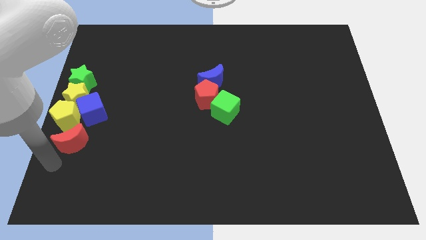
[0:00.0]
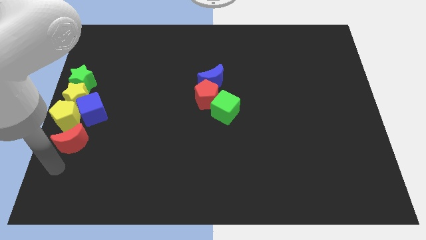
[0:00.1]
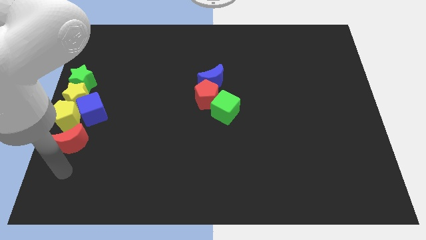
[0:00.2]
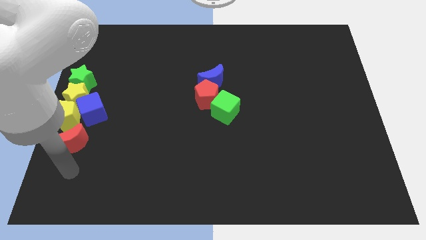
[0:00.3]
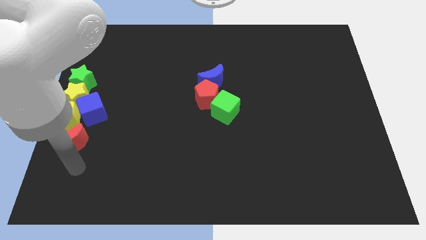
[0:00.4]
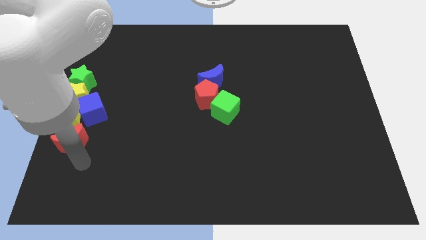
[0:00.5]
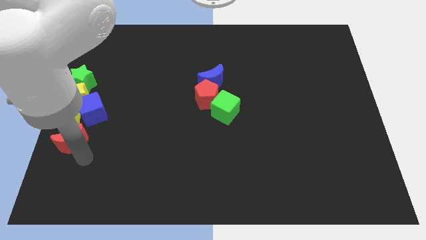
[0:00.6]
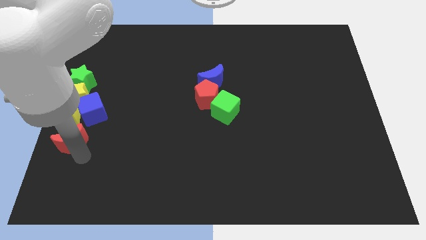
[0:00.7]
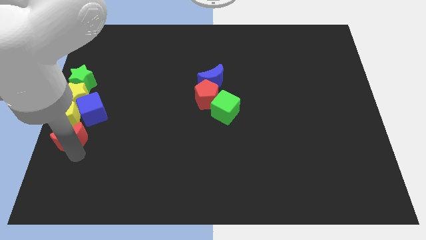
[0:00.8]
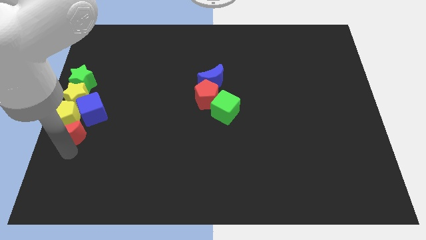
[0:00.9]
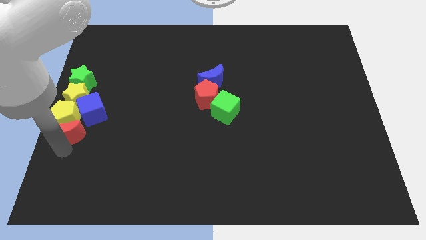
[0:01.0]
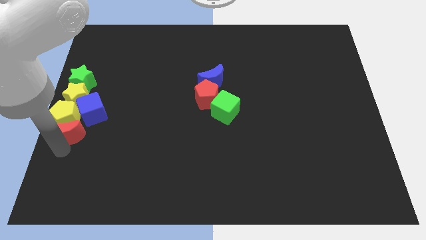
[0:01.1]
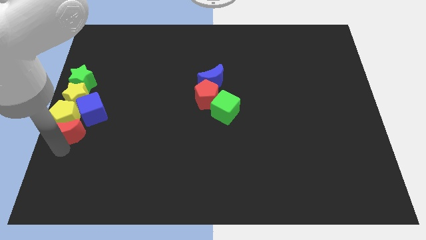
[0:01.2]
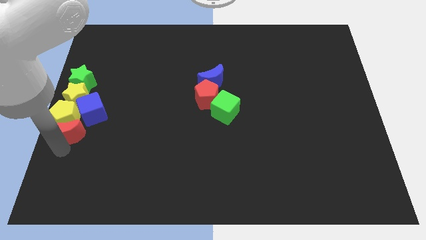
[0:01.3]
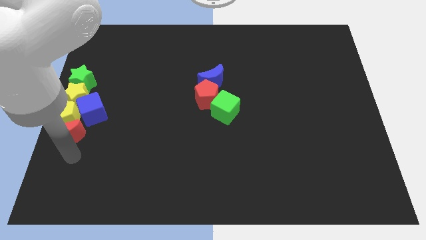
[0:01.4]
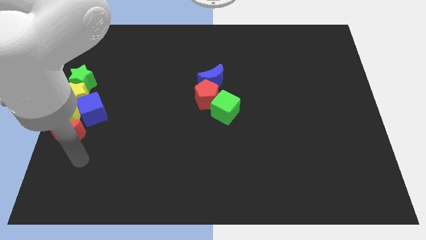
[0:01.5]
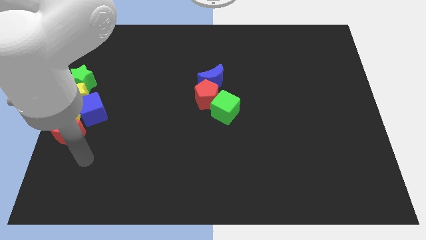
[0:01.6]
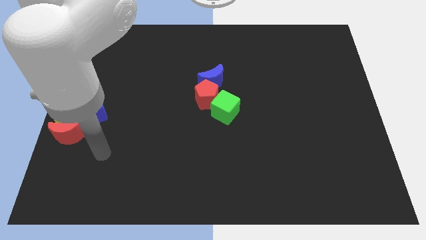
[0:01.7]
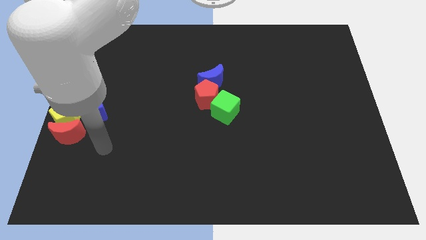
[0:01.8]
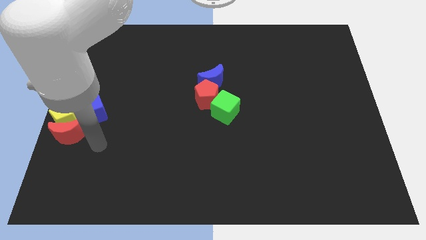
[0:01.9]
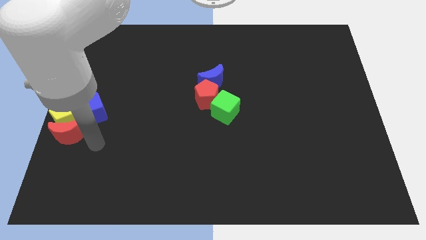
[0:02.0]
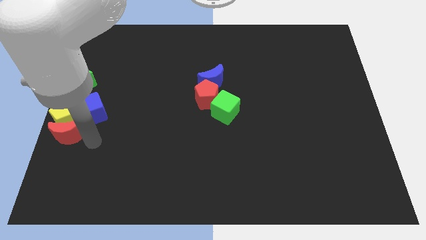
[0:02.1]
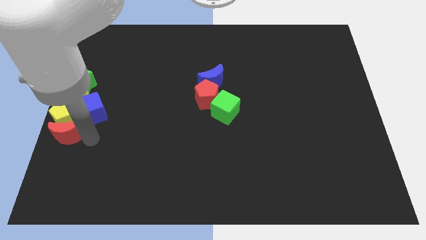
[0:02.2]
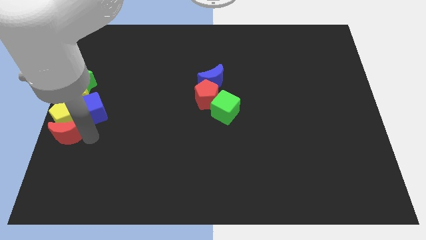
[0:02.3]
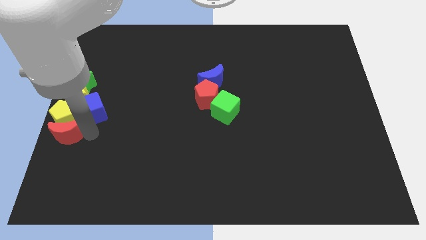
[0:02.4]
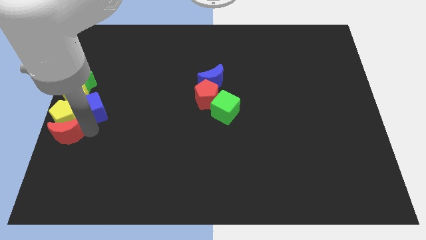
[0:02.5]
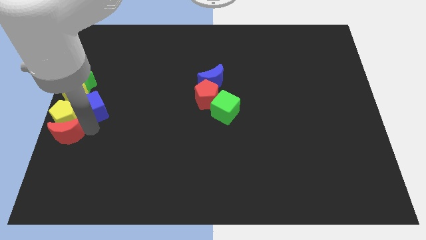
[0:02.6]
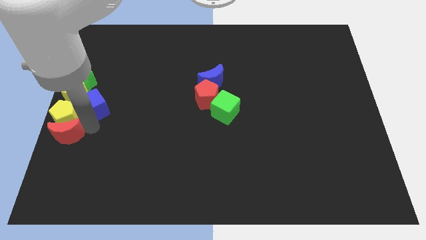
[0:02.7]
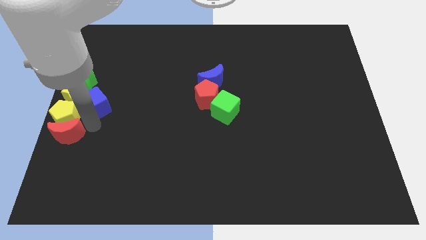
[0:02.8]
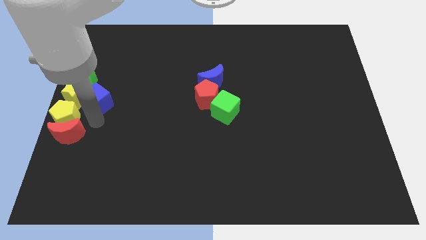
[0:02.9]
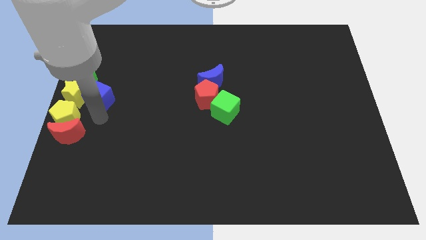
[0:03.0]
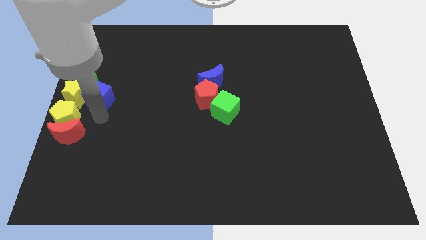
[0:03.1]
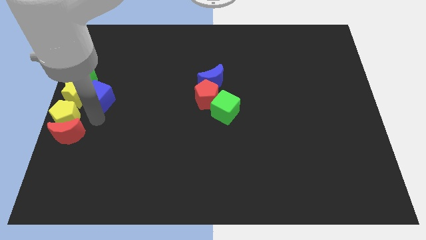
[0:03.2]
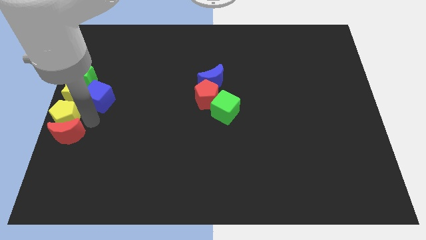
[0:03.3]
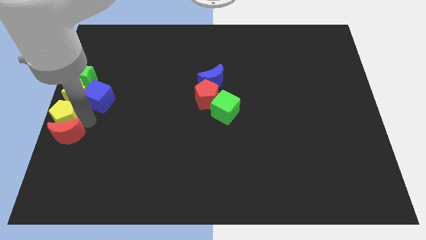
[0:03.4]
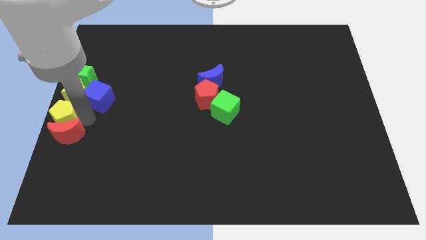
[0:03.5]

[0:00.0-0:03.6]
push the blue cube slightly towards the top of the board

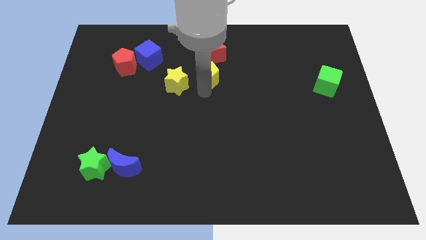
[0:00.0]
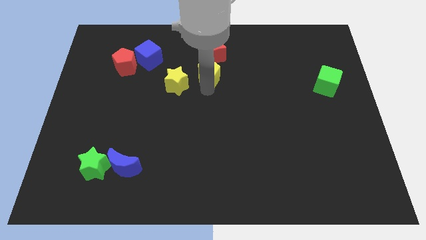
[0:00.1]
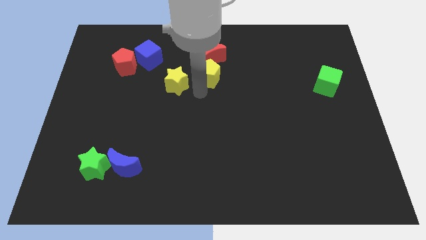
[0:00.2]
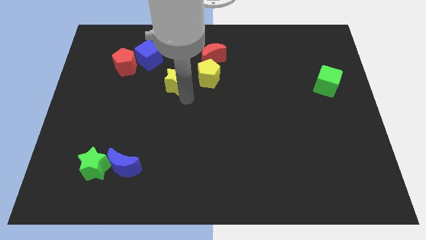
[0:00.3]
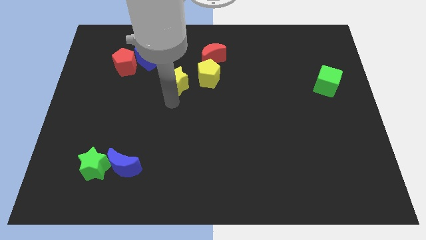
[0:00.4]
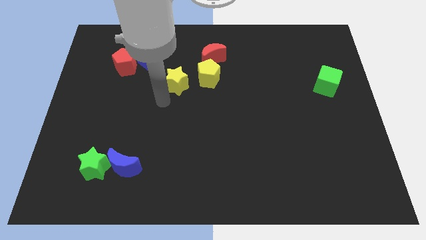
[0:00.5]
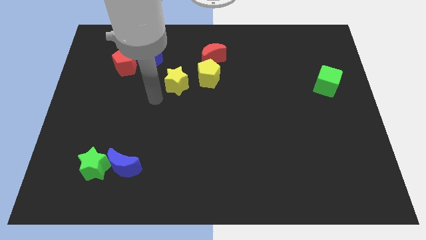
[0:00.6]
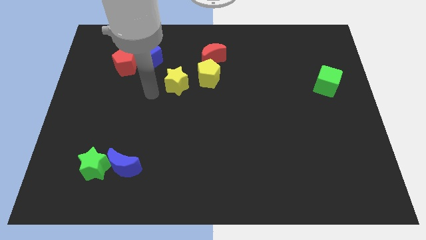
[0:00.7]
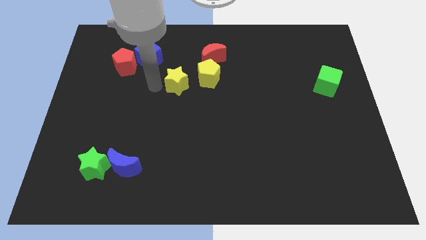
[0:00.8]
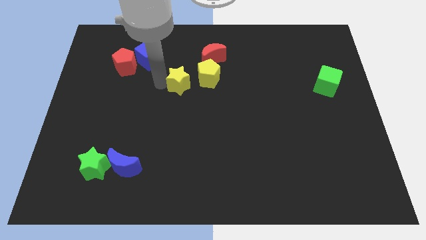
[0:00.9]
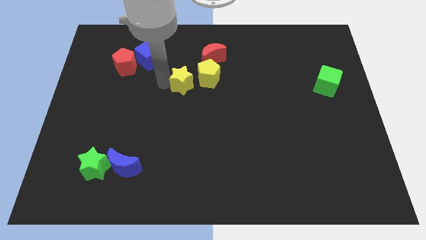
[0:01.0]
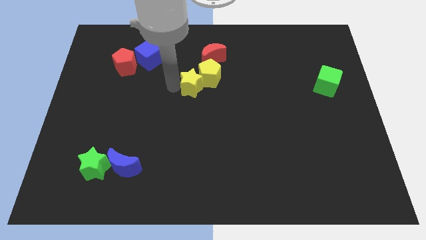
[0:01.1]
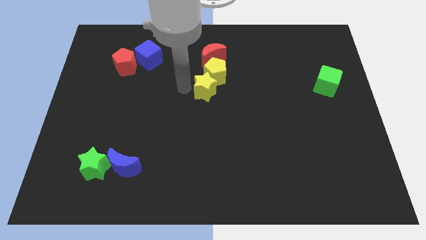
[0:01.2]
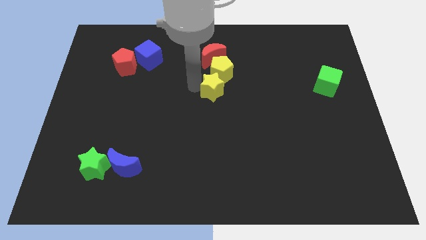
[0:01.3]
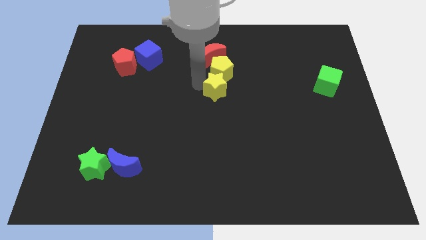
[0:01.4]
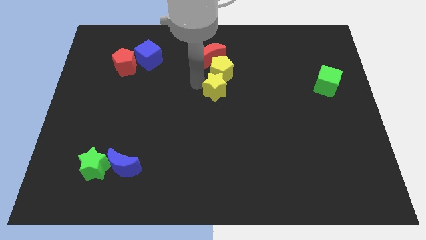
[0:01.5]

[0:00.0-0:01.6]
push the yellow star into the yellow pentagon

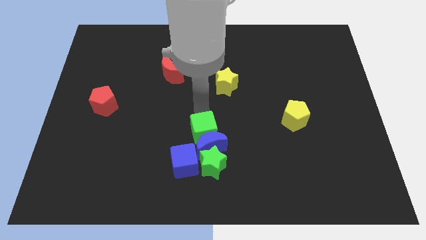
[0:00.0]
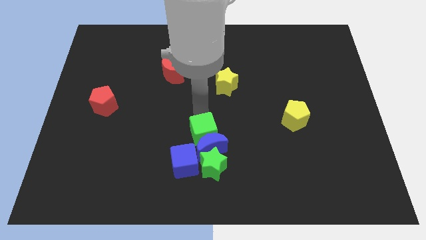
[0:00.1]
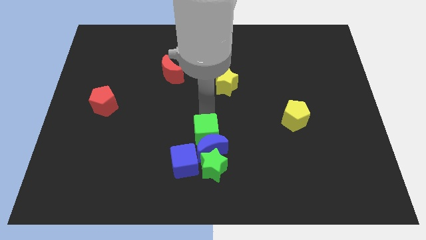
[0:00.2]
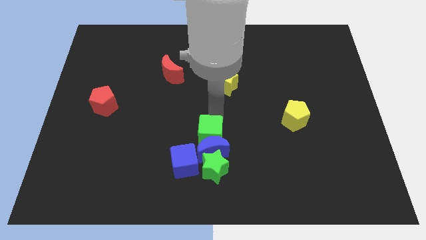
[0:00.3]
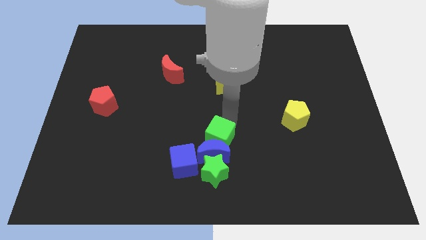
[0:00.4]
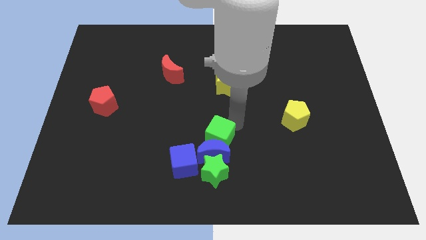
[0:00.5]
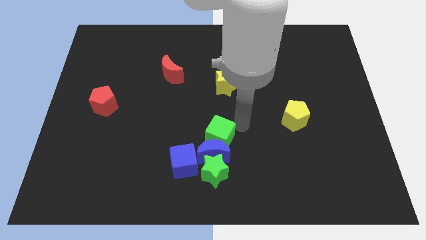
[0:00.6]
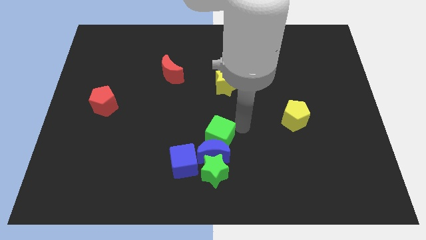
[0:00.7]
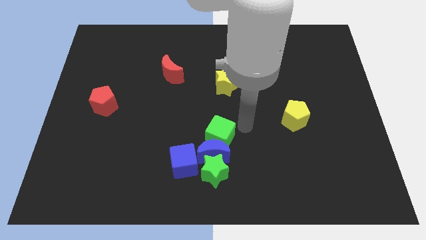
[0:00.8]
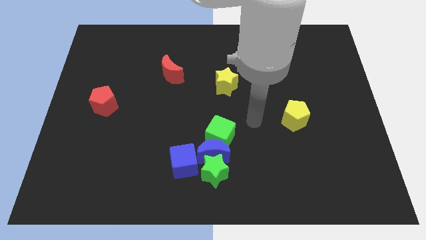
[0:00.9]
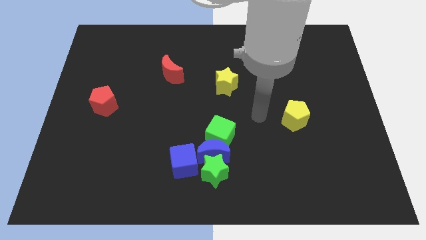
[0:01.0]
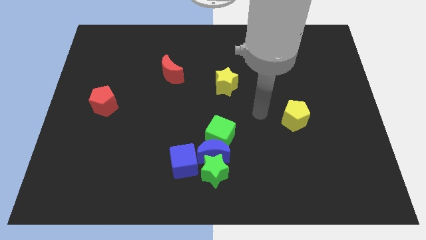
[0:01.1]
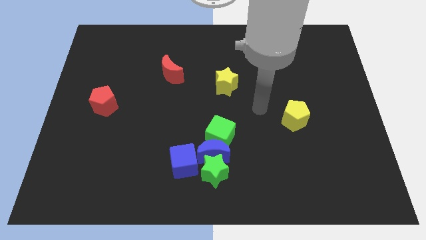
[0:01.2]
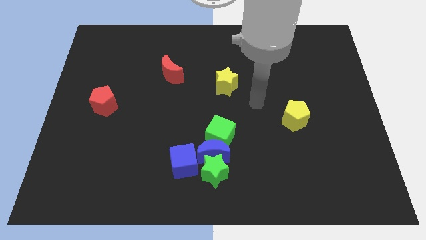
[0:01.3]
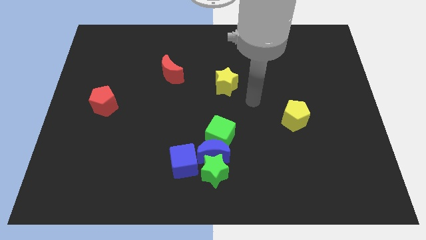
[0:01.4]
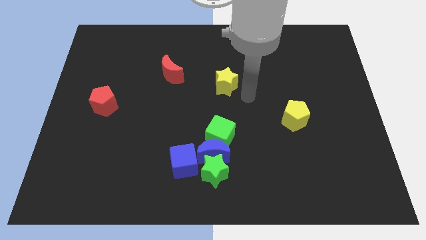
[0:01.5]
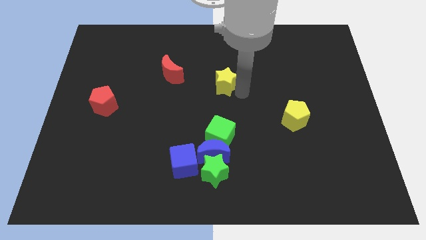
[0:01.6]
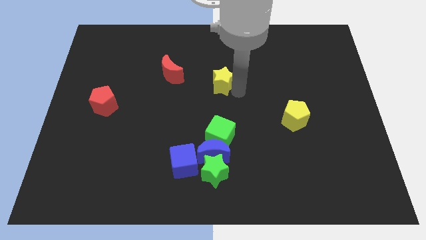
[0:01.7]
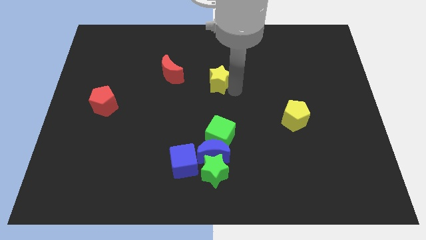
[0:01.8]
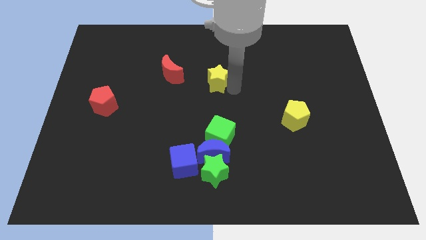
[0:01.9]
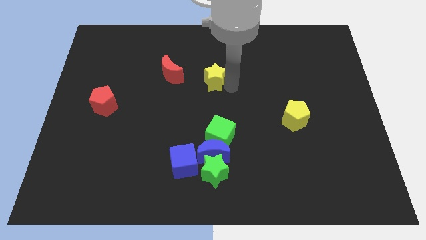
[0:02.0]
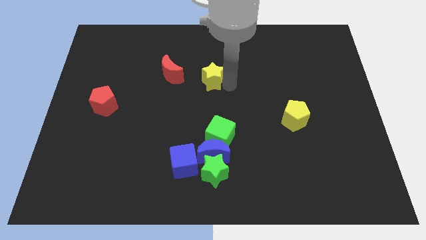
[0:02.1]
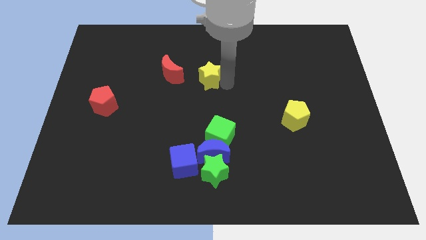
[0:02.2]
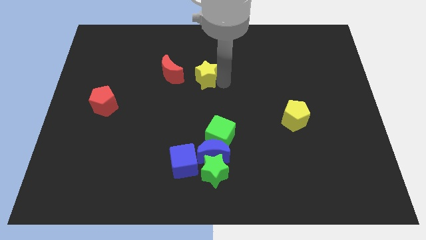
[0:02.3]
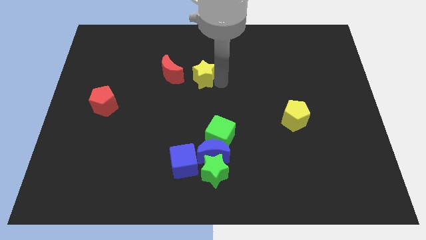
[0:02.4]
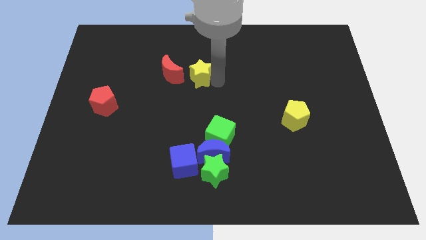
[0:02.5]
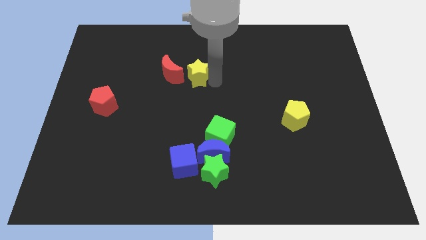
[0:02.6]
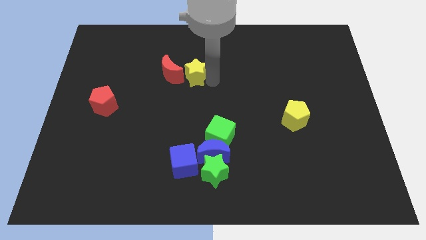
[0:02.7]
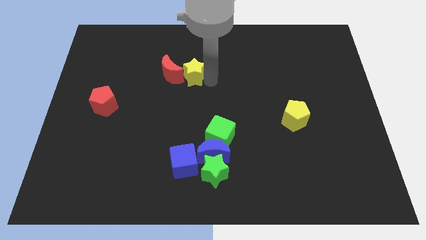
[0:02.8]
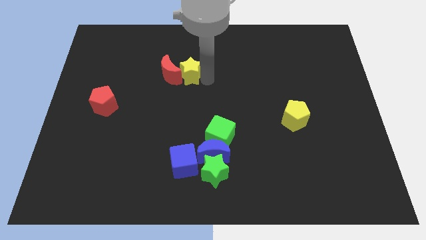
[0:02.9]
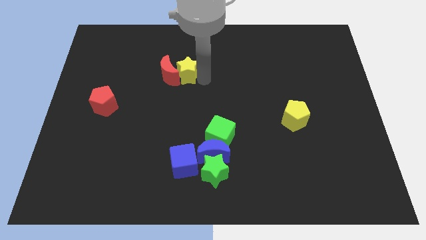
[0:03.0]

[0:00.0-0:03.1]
place the yellow star towards the red moon

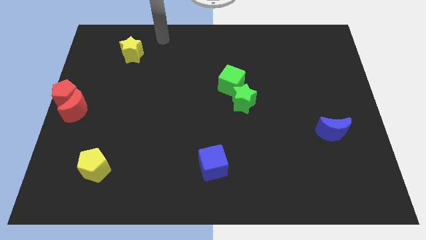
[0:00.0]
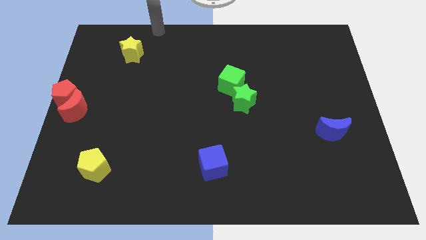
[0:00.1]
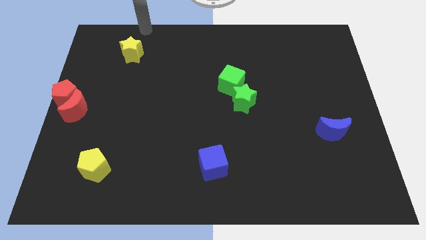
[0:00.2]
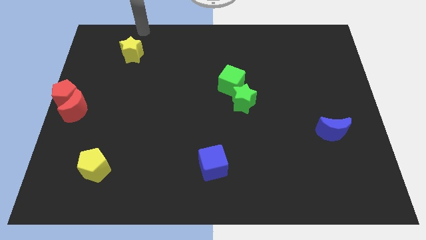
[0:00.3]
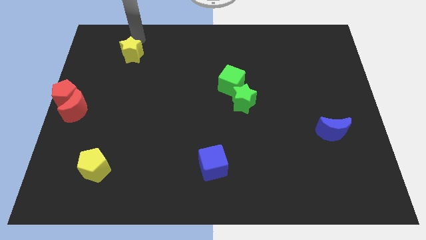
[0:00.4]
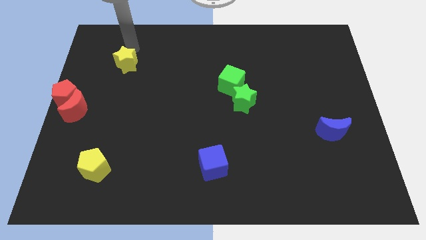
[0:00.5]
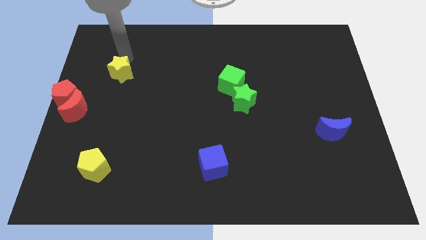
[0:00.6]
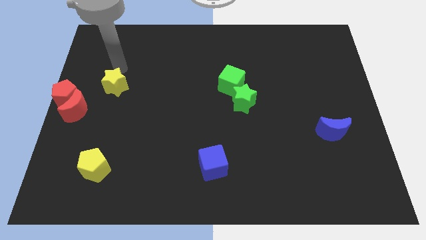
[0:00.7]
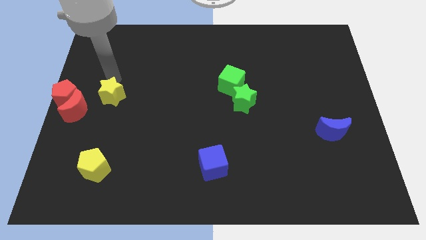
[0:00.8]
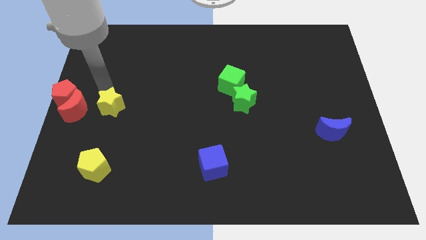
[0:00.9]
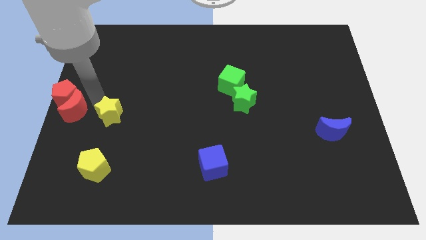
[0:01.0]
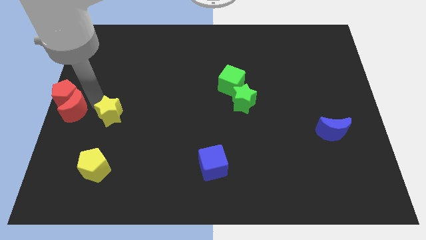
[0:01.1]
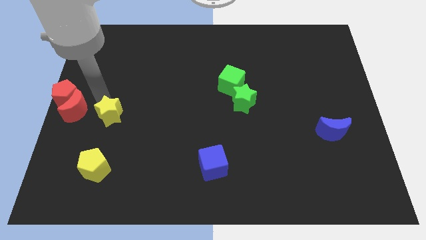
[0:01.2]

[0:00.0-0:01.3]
place the yellow star to the right of the red moon
